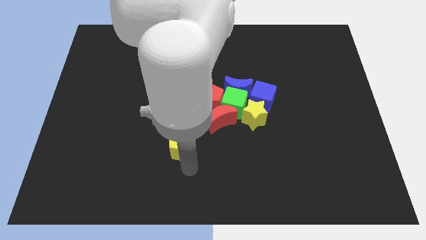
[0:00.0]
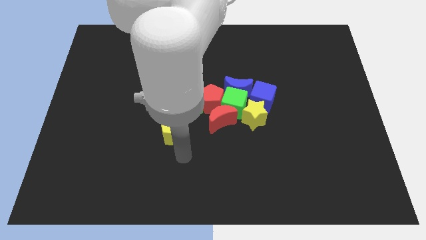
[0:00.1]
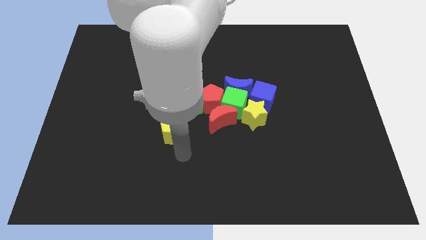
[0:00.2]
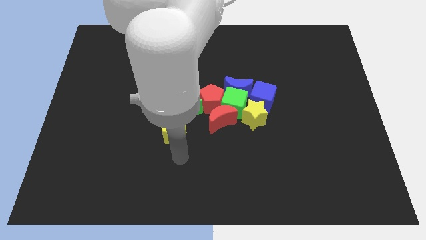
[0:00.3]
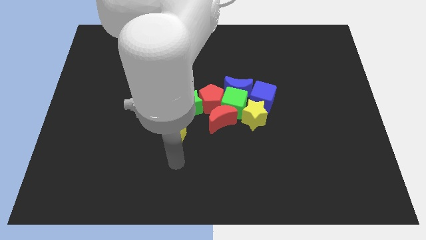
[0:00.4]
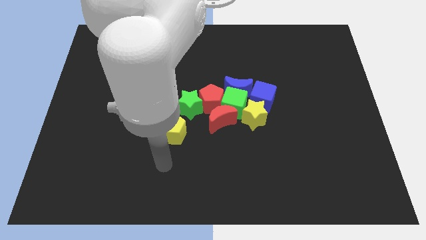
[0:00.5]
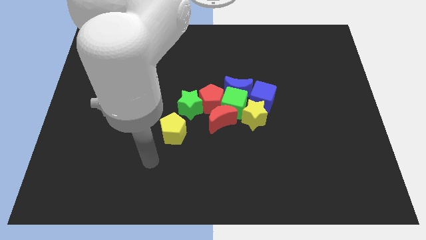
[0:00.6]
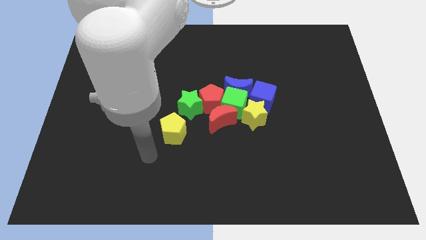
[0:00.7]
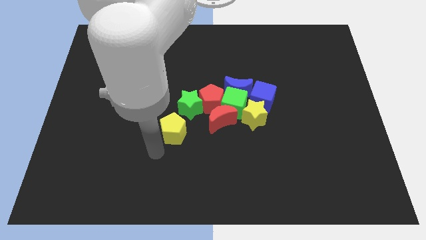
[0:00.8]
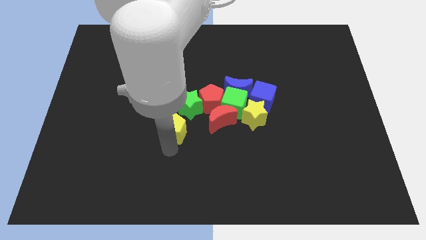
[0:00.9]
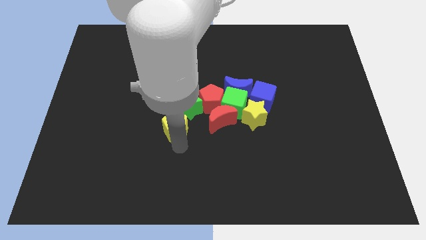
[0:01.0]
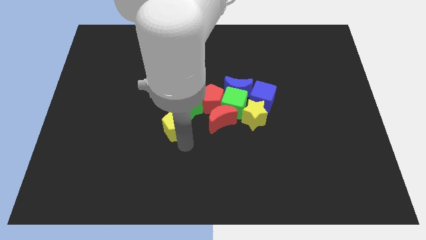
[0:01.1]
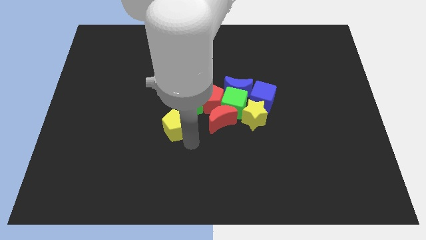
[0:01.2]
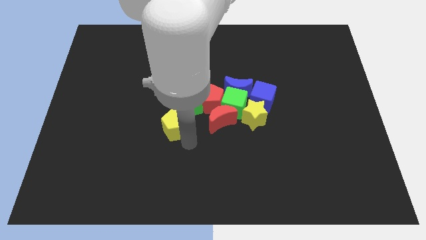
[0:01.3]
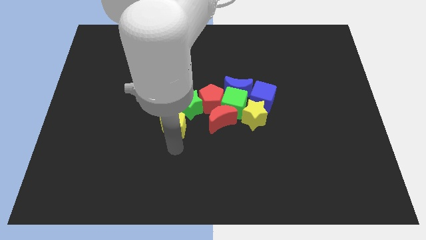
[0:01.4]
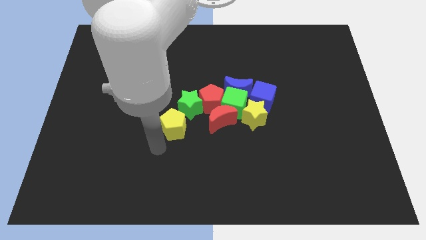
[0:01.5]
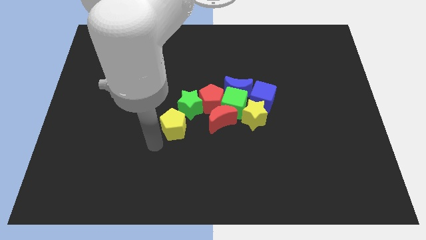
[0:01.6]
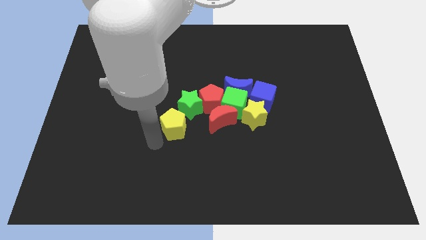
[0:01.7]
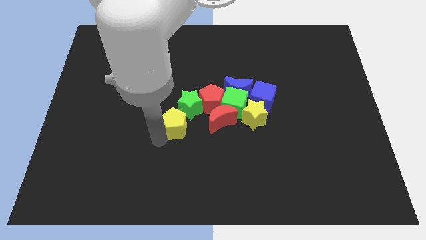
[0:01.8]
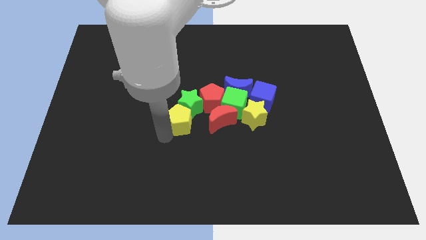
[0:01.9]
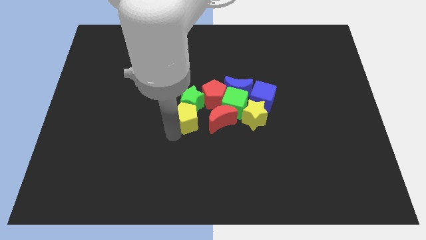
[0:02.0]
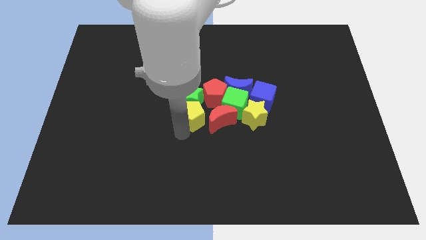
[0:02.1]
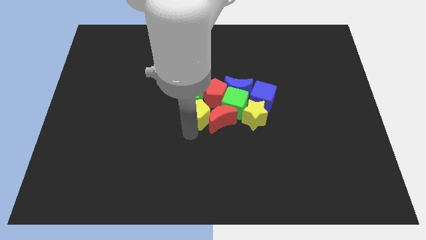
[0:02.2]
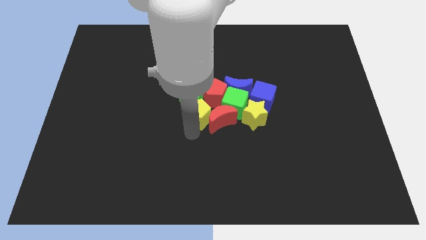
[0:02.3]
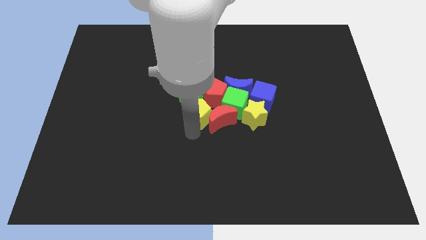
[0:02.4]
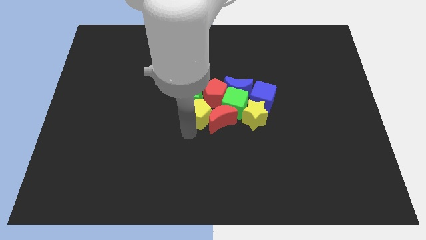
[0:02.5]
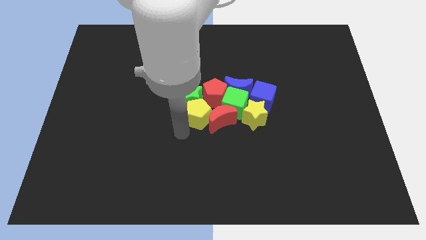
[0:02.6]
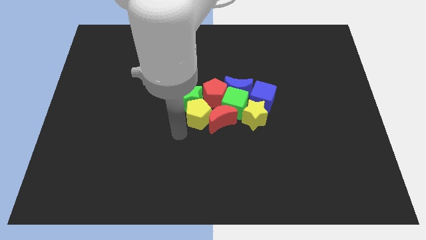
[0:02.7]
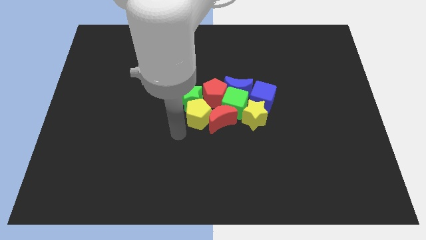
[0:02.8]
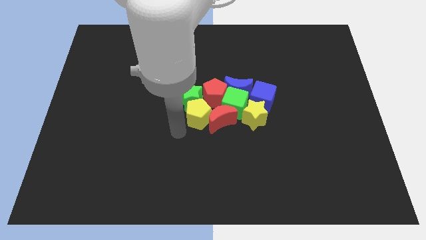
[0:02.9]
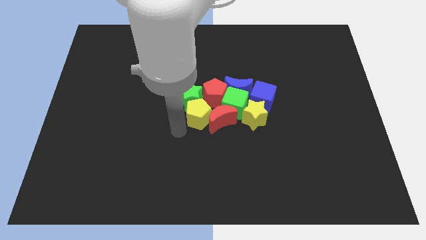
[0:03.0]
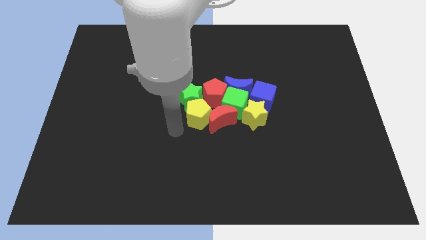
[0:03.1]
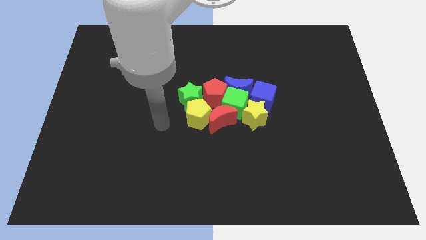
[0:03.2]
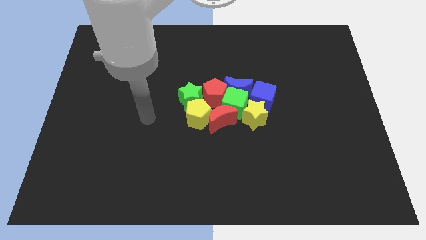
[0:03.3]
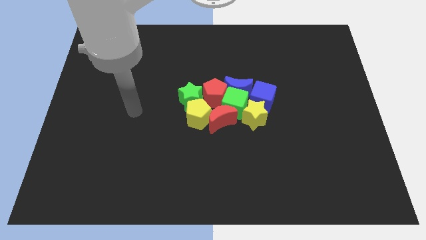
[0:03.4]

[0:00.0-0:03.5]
put the yellow pentagon between the green star and red moon

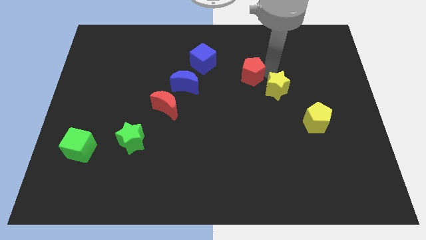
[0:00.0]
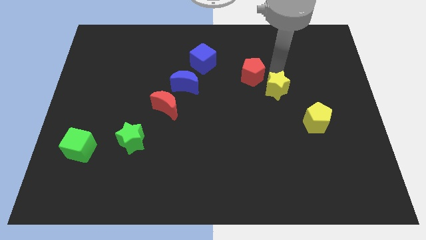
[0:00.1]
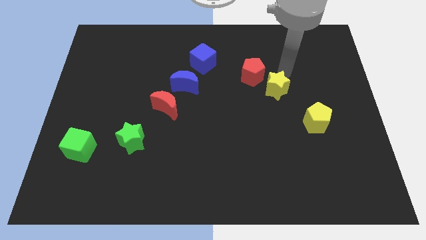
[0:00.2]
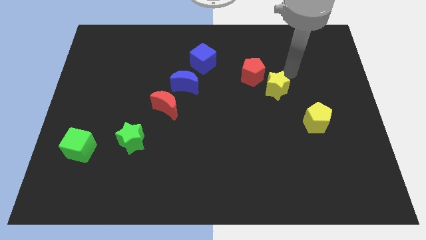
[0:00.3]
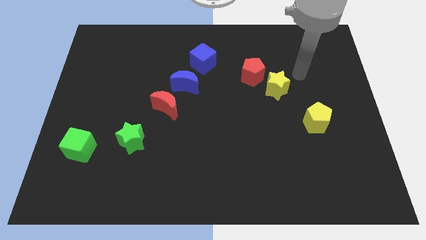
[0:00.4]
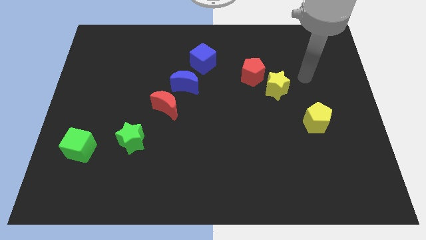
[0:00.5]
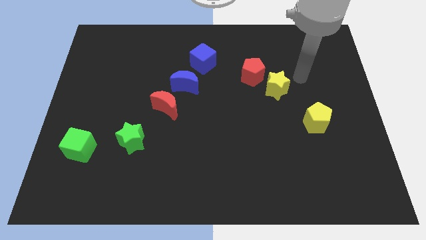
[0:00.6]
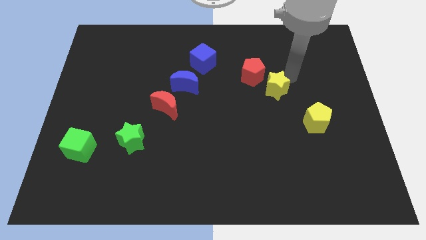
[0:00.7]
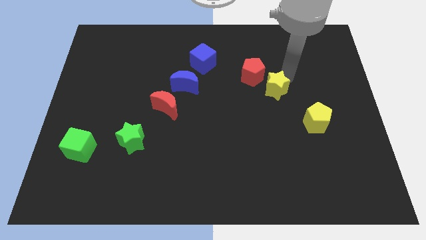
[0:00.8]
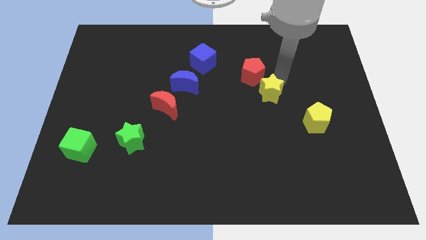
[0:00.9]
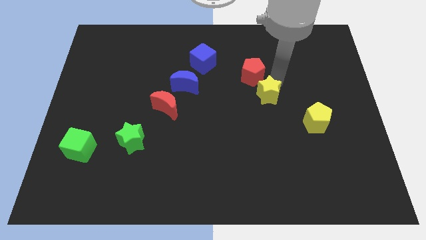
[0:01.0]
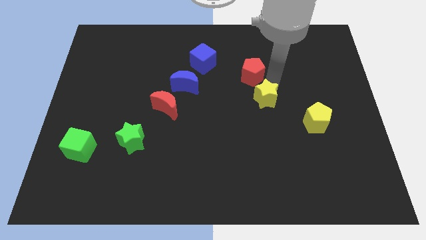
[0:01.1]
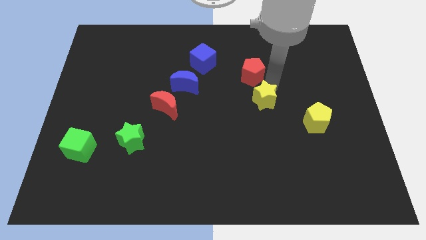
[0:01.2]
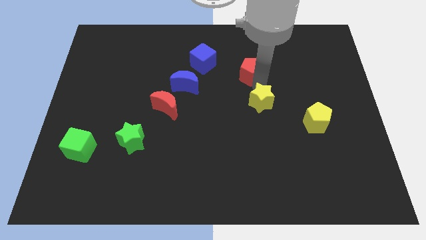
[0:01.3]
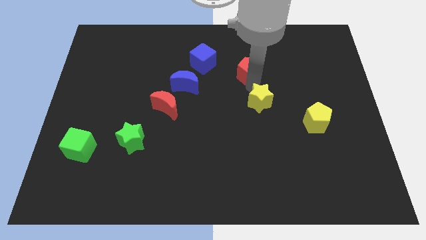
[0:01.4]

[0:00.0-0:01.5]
push yellow star to the bottom of the red pentagon

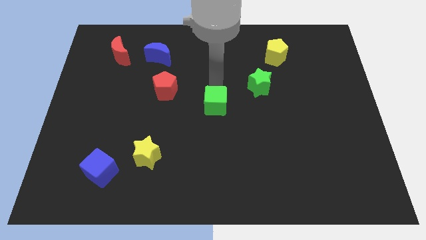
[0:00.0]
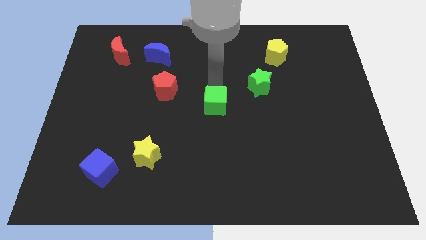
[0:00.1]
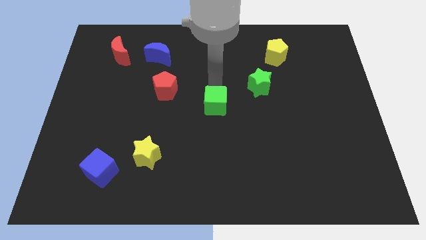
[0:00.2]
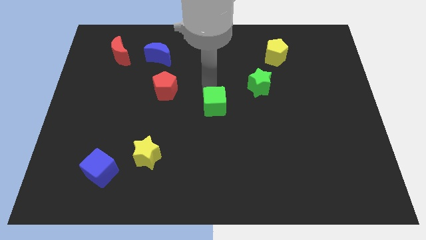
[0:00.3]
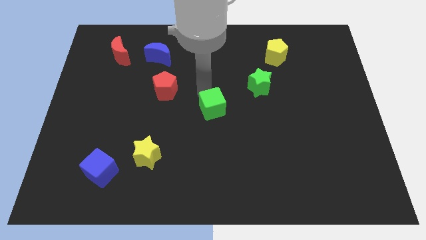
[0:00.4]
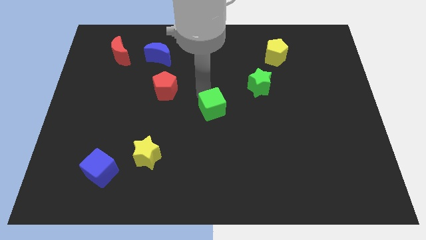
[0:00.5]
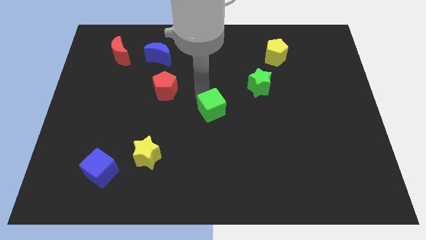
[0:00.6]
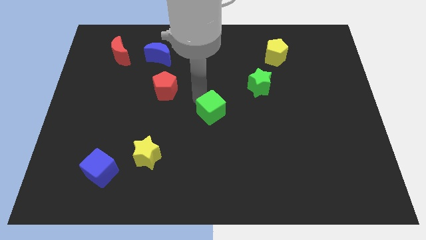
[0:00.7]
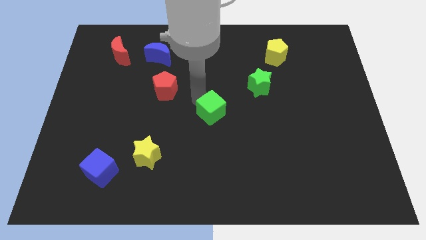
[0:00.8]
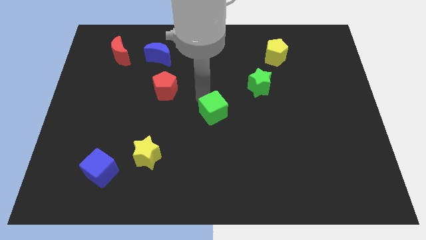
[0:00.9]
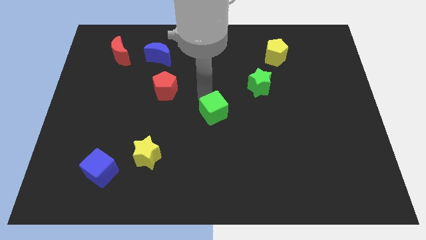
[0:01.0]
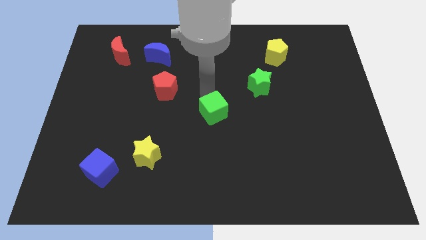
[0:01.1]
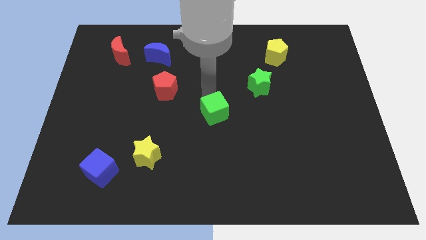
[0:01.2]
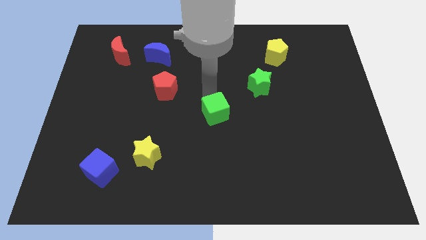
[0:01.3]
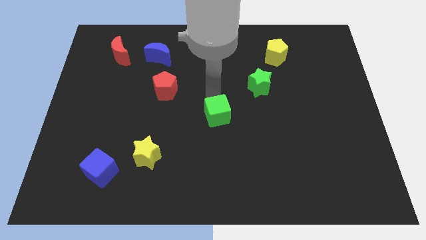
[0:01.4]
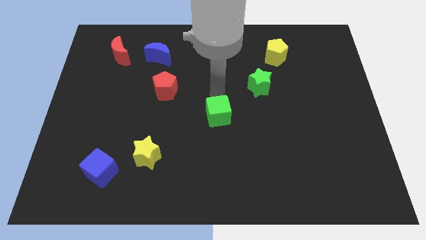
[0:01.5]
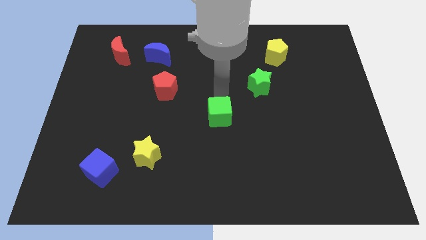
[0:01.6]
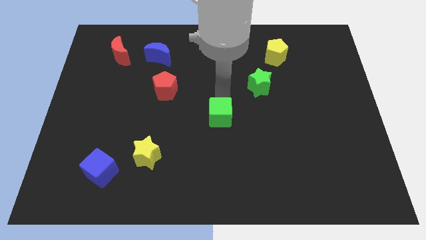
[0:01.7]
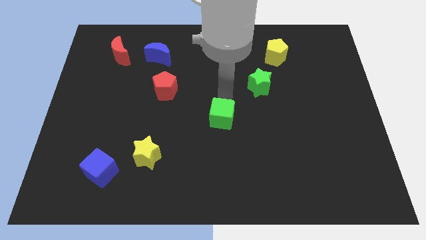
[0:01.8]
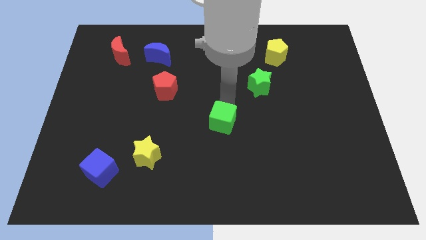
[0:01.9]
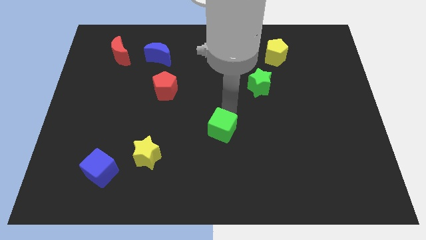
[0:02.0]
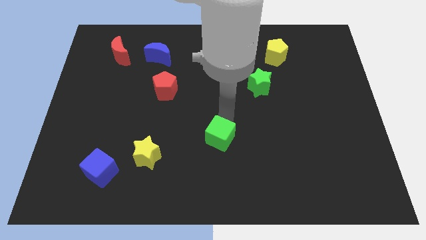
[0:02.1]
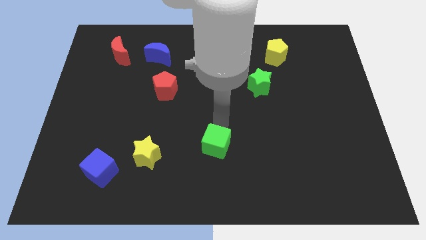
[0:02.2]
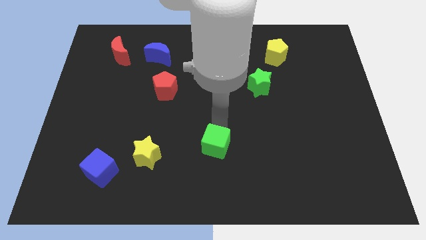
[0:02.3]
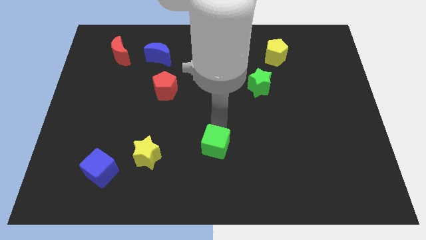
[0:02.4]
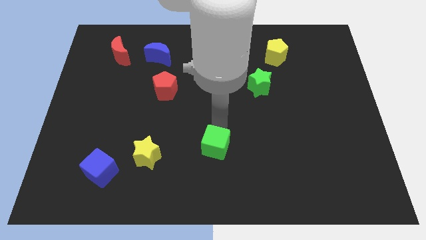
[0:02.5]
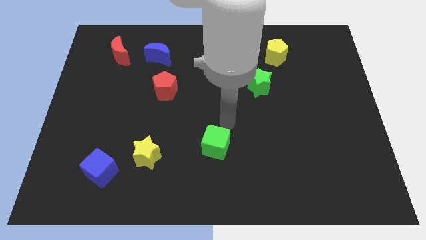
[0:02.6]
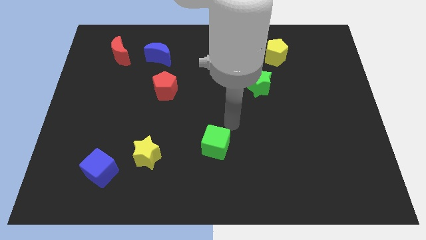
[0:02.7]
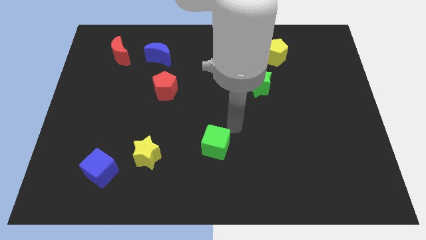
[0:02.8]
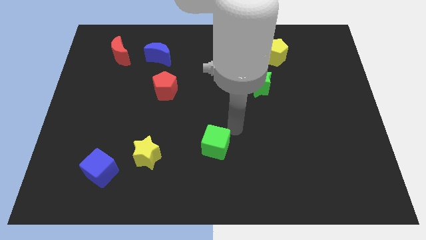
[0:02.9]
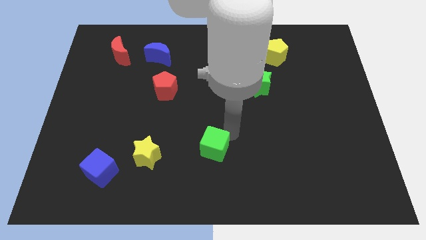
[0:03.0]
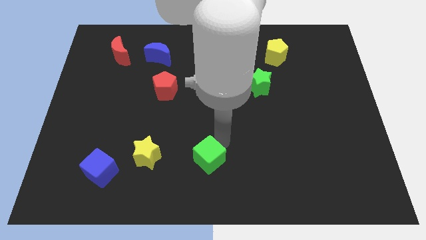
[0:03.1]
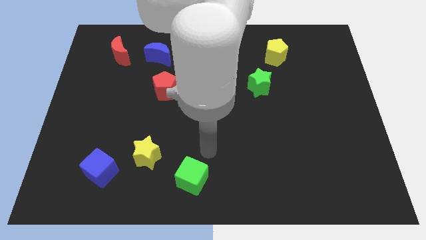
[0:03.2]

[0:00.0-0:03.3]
push the green cube horizontally to the right of the yellow star

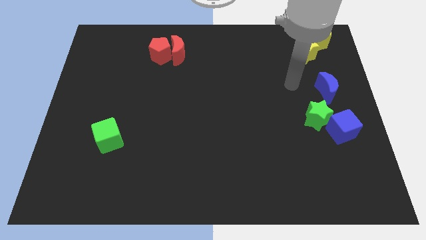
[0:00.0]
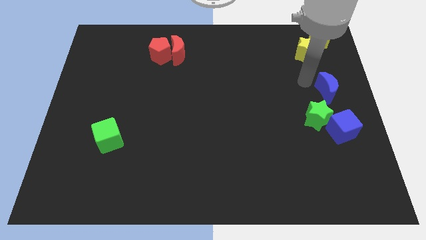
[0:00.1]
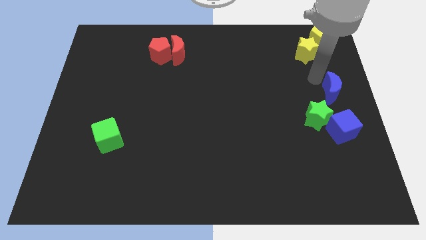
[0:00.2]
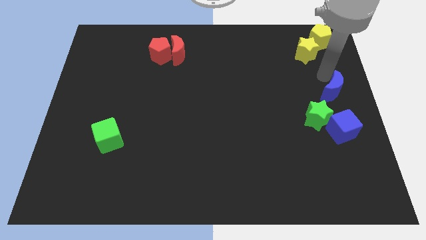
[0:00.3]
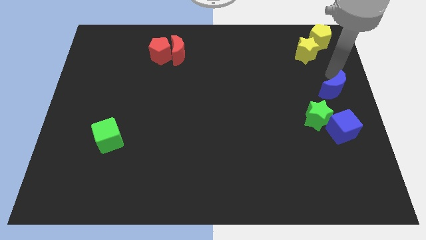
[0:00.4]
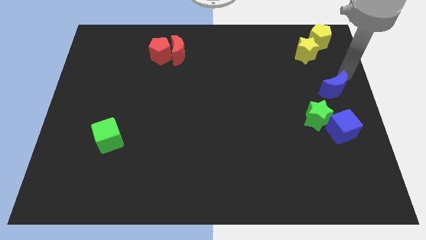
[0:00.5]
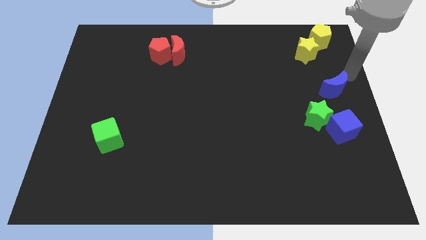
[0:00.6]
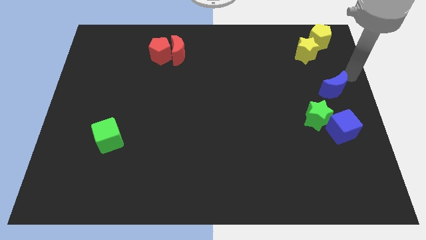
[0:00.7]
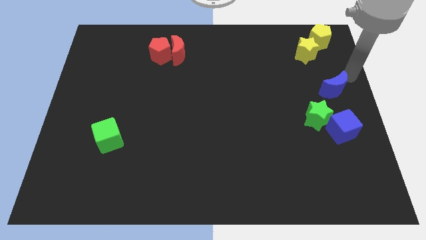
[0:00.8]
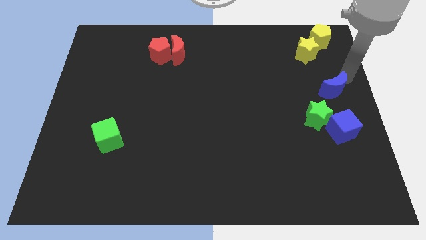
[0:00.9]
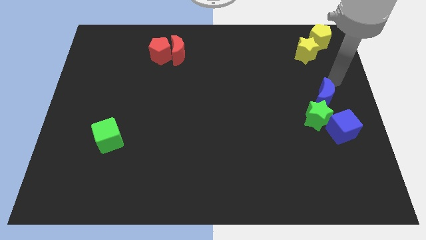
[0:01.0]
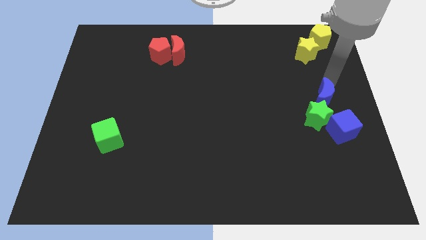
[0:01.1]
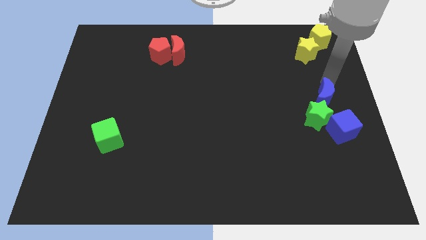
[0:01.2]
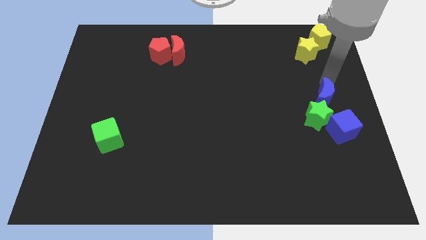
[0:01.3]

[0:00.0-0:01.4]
slightly move the blue moon
